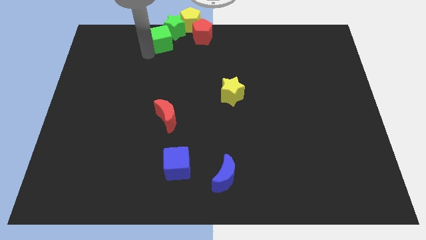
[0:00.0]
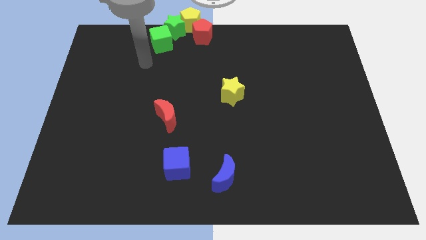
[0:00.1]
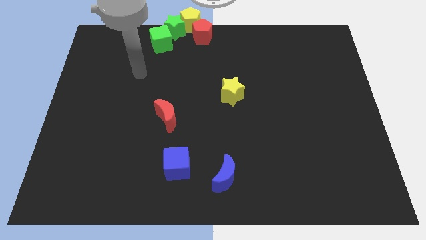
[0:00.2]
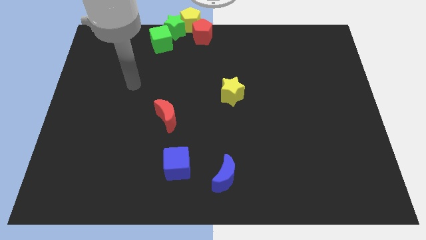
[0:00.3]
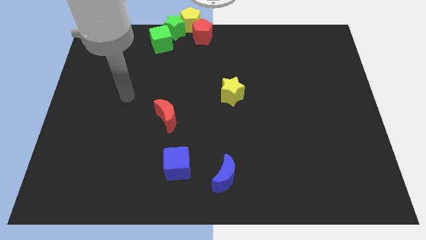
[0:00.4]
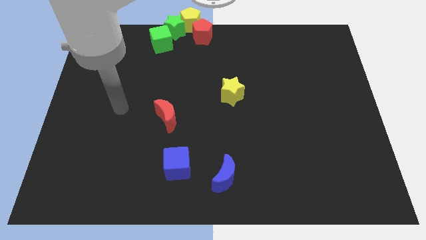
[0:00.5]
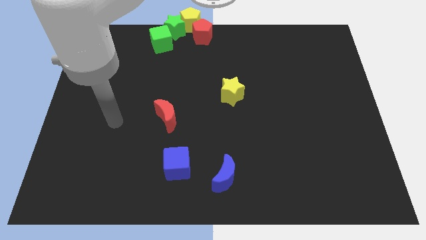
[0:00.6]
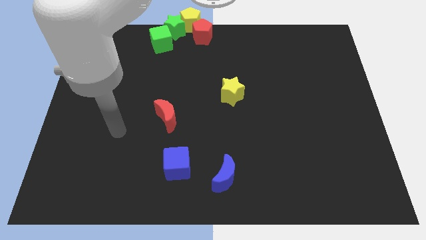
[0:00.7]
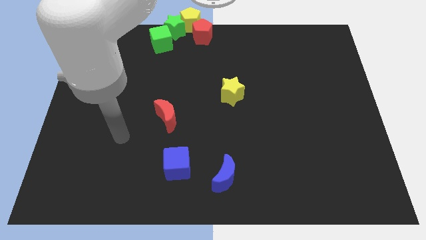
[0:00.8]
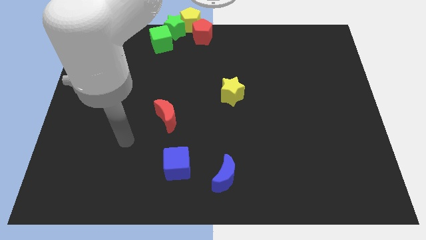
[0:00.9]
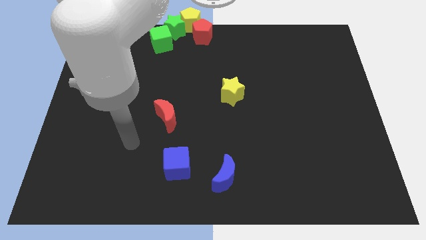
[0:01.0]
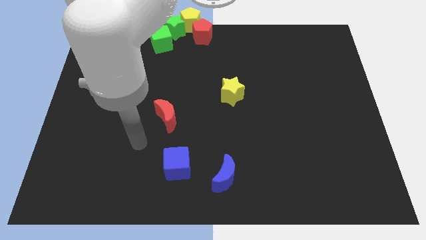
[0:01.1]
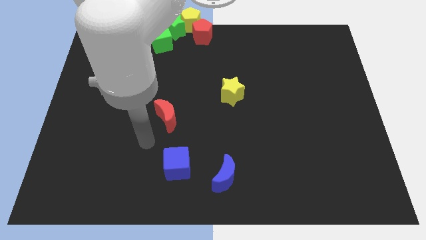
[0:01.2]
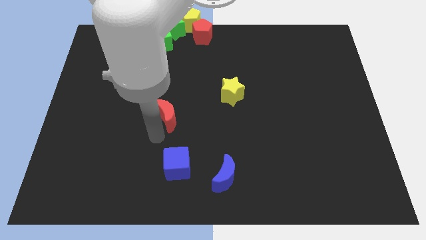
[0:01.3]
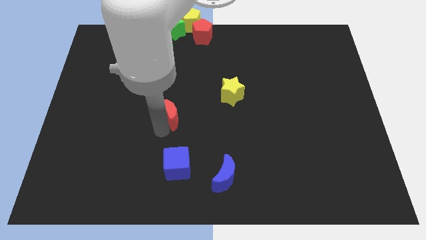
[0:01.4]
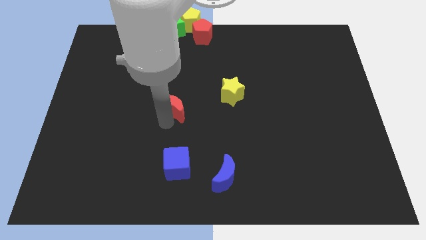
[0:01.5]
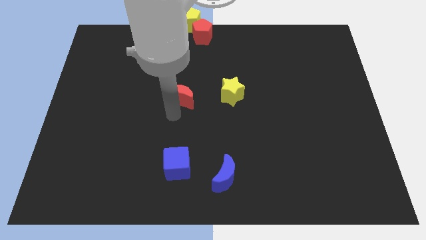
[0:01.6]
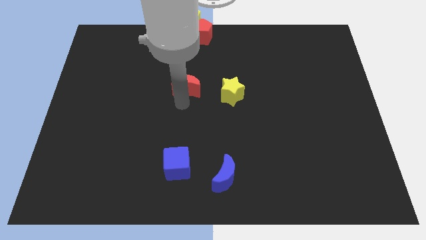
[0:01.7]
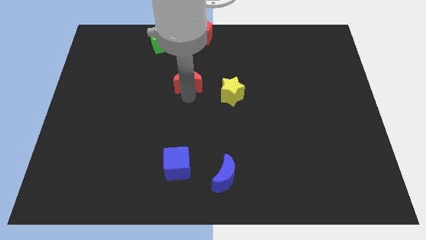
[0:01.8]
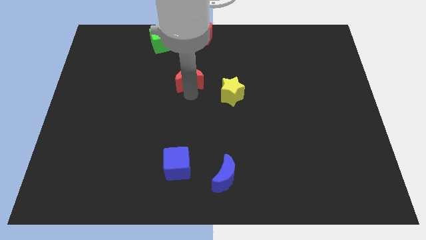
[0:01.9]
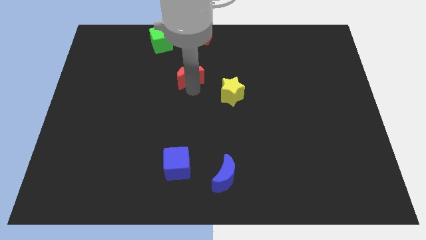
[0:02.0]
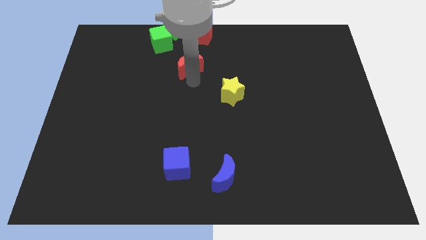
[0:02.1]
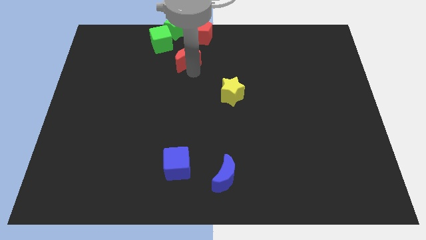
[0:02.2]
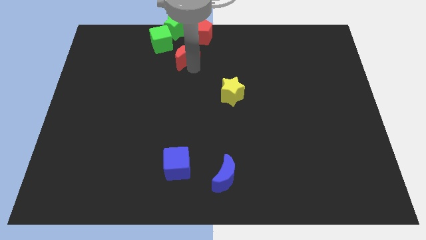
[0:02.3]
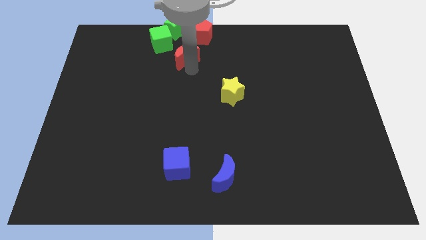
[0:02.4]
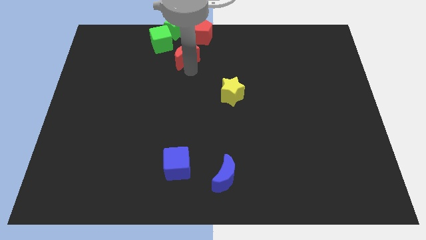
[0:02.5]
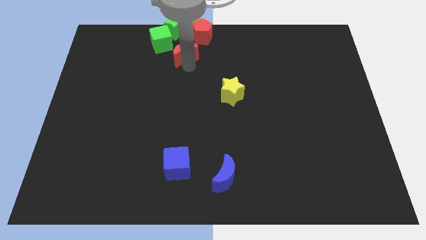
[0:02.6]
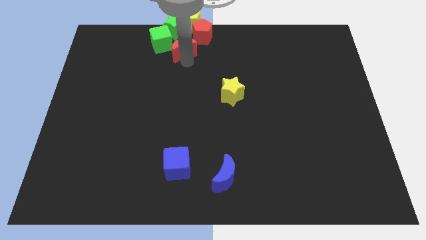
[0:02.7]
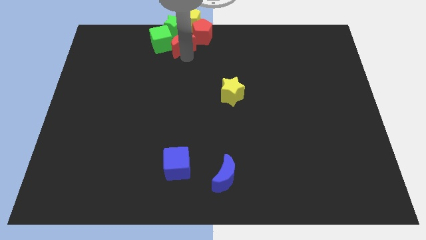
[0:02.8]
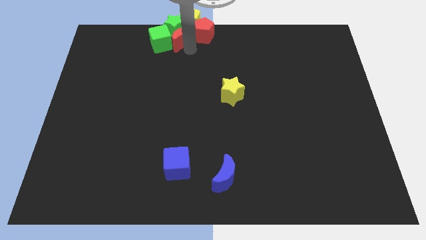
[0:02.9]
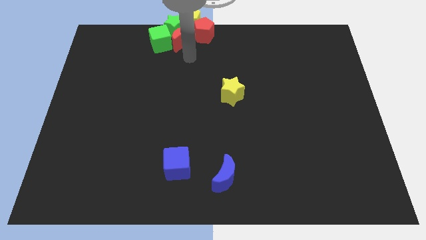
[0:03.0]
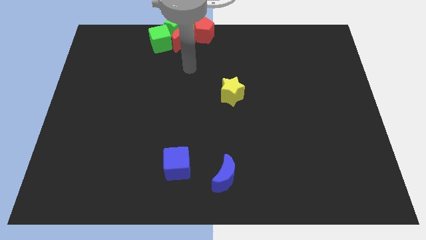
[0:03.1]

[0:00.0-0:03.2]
push the red moon into the green star

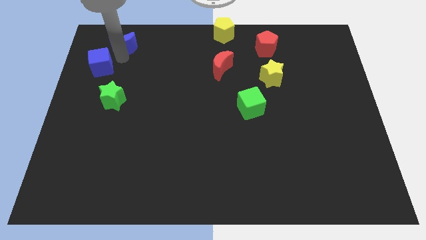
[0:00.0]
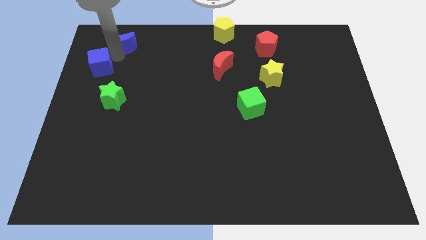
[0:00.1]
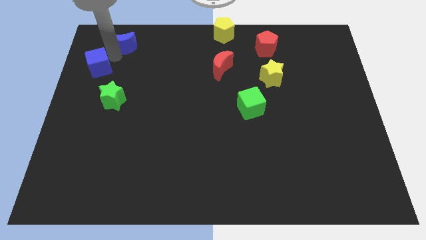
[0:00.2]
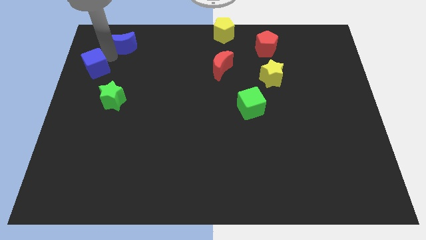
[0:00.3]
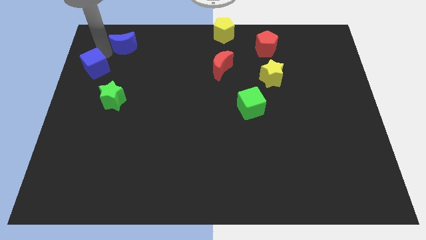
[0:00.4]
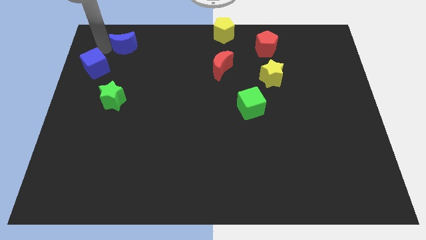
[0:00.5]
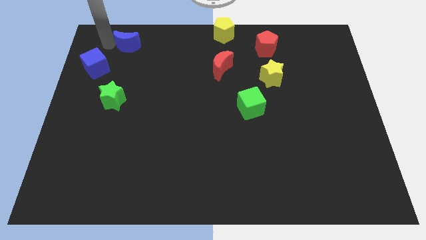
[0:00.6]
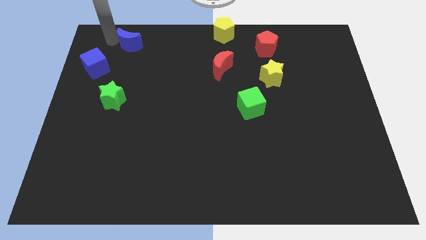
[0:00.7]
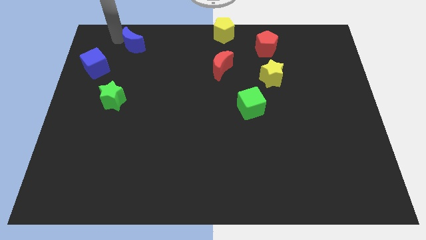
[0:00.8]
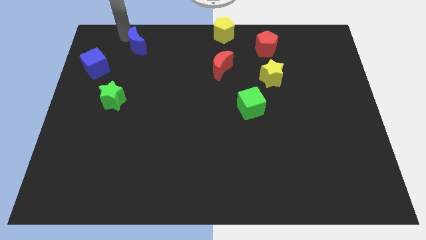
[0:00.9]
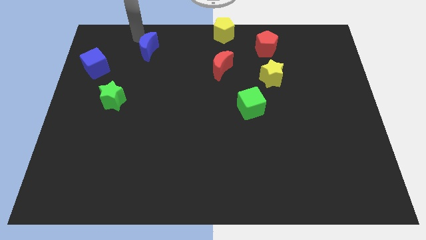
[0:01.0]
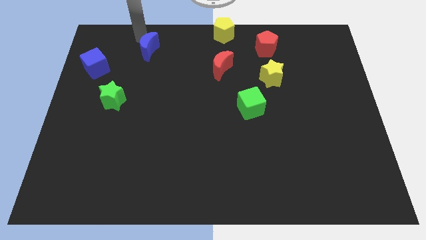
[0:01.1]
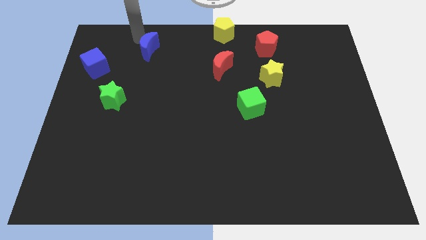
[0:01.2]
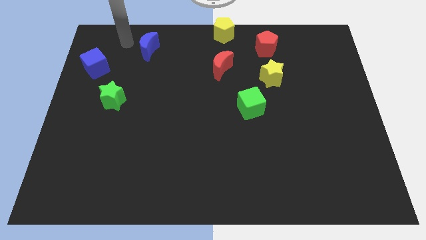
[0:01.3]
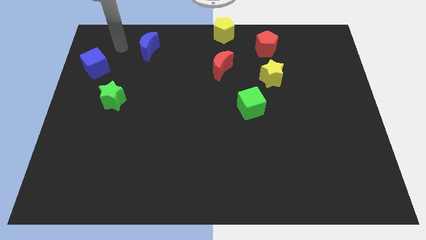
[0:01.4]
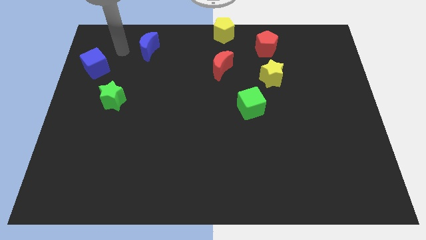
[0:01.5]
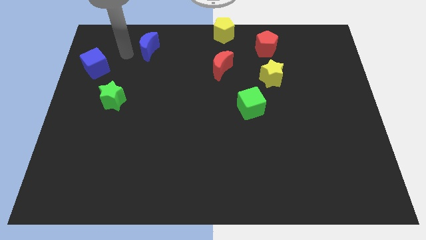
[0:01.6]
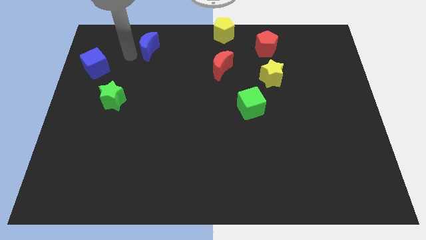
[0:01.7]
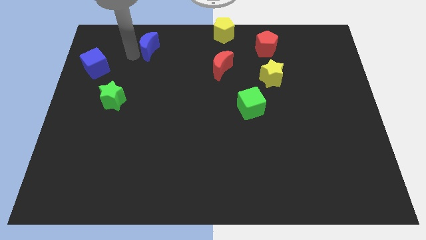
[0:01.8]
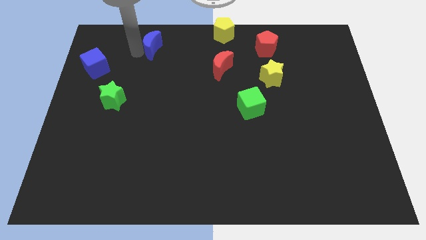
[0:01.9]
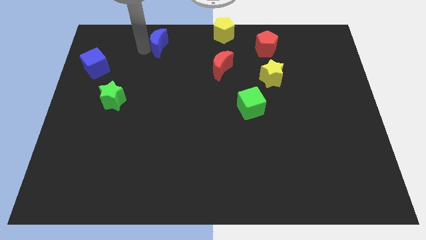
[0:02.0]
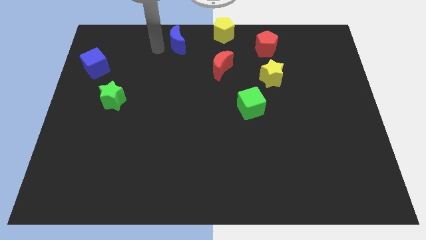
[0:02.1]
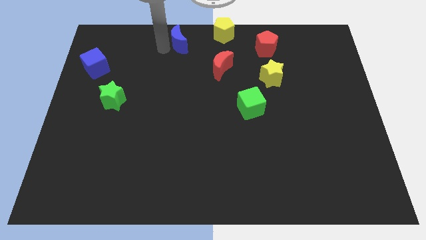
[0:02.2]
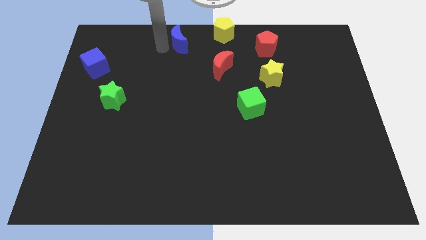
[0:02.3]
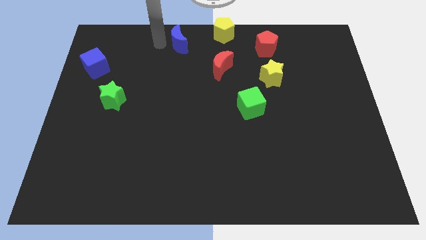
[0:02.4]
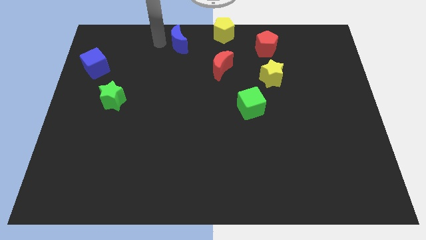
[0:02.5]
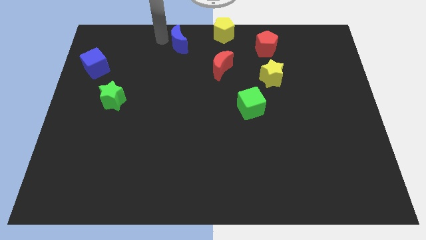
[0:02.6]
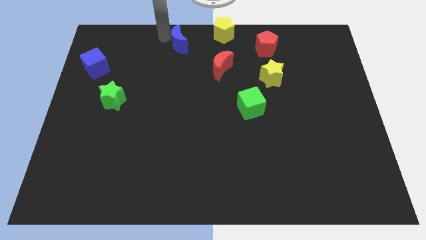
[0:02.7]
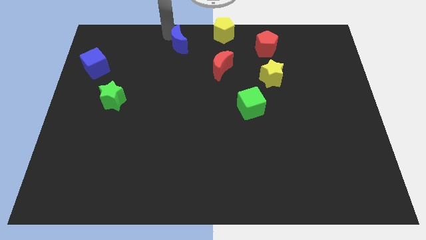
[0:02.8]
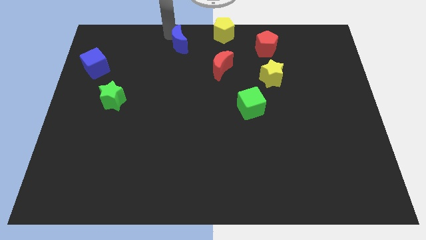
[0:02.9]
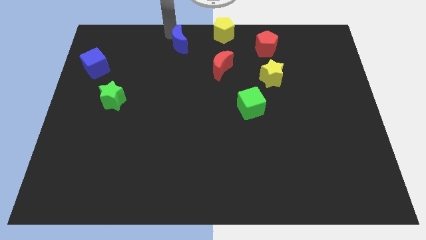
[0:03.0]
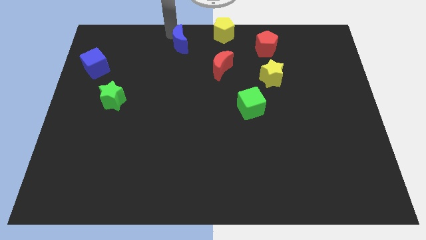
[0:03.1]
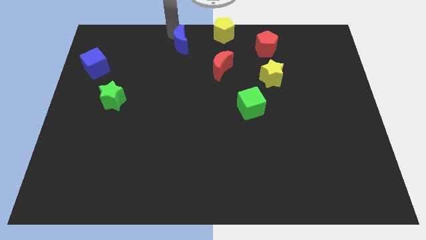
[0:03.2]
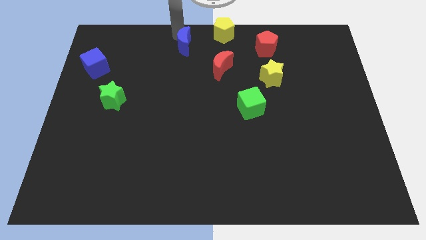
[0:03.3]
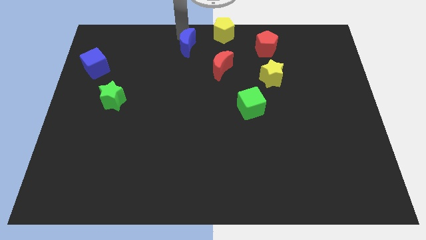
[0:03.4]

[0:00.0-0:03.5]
place blue crescent above red crescent

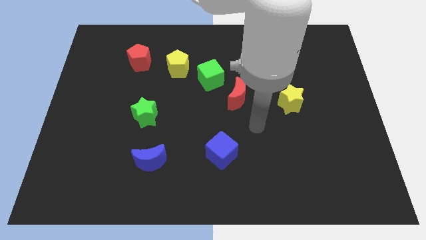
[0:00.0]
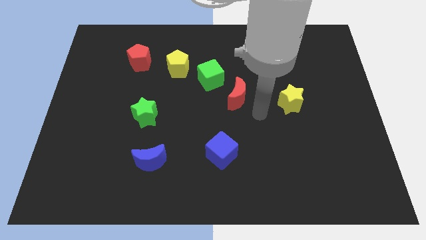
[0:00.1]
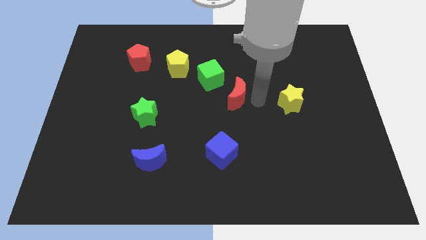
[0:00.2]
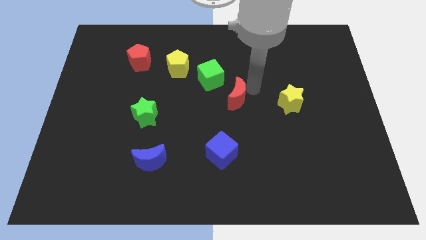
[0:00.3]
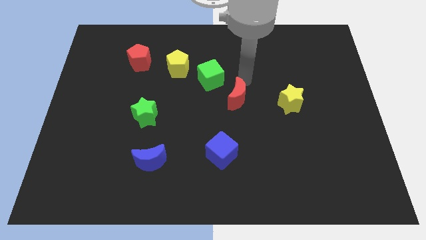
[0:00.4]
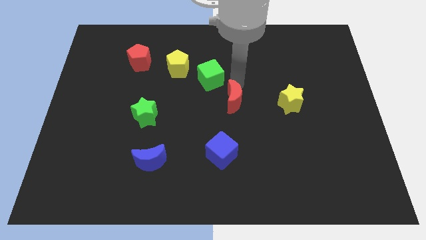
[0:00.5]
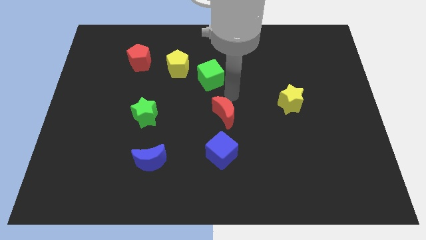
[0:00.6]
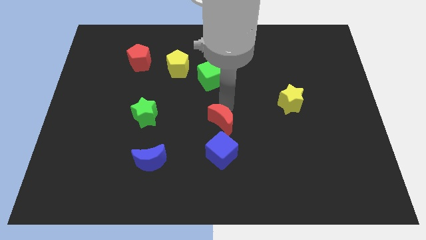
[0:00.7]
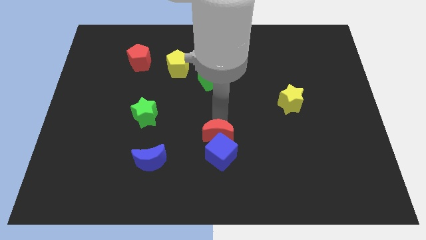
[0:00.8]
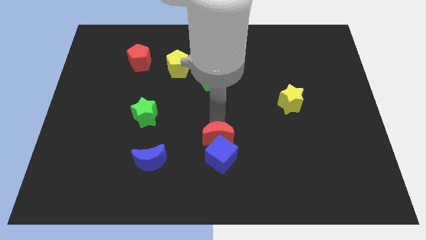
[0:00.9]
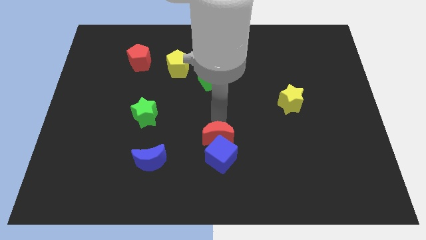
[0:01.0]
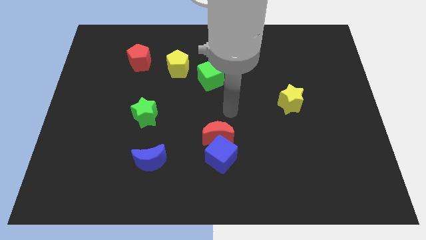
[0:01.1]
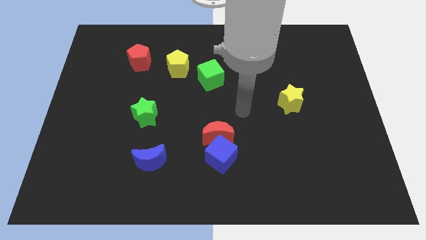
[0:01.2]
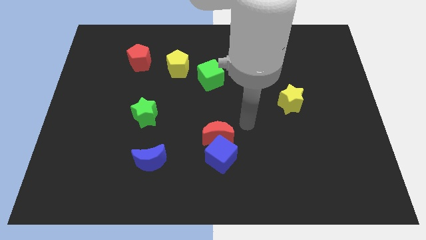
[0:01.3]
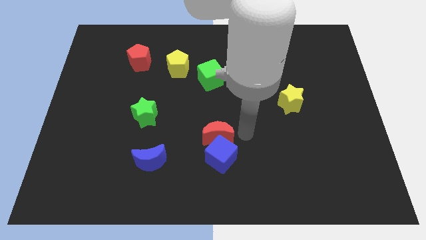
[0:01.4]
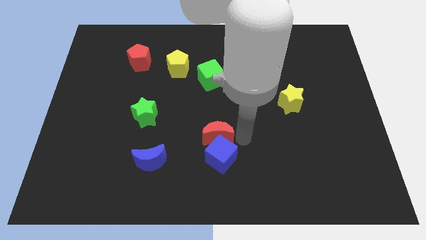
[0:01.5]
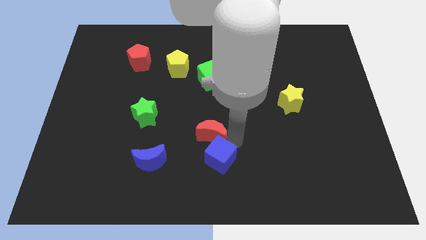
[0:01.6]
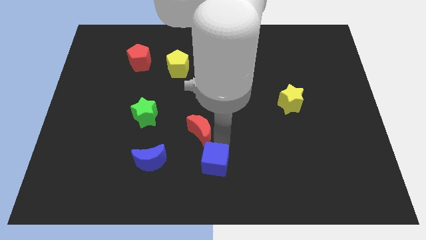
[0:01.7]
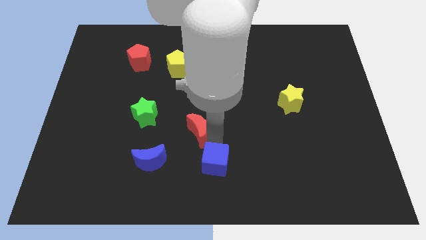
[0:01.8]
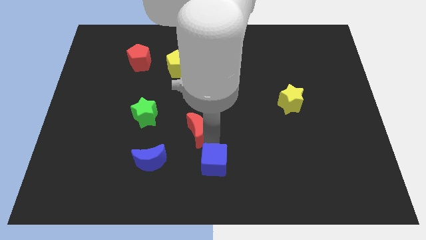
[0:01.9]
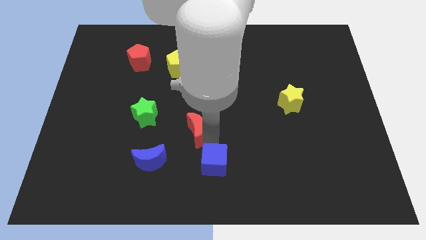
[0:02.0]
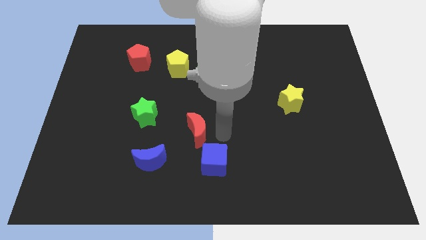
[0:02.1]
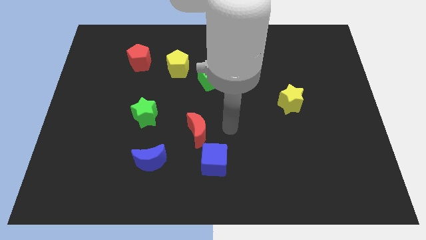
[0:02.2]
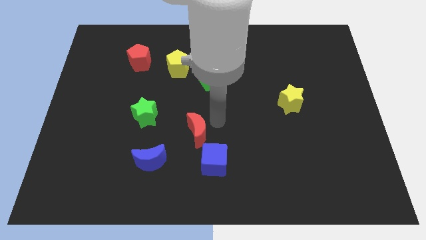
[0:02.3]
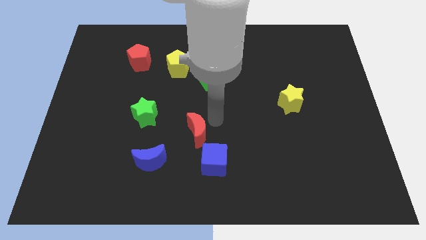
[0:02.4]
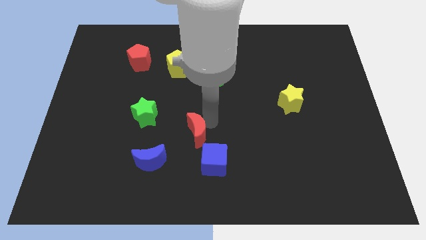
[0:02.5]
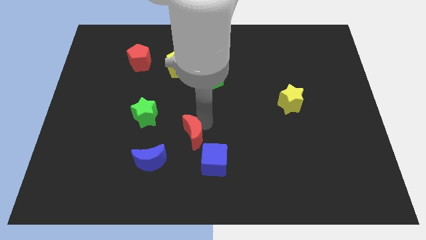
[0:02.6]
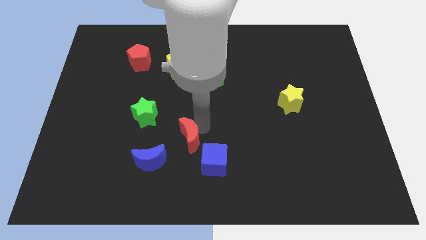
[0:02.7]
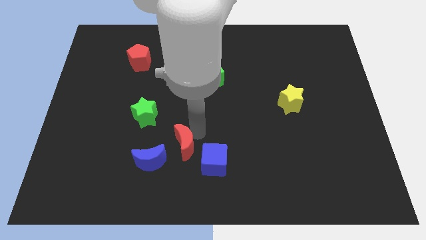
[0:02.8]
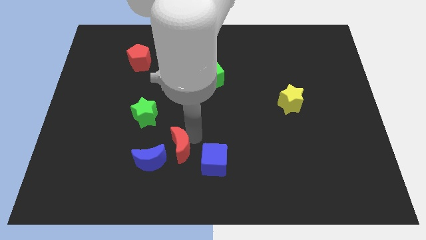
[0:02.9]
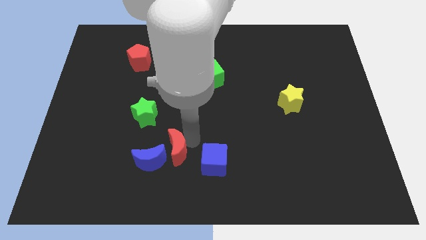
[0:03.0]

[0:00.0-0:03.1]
push the red crescent below yellow pentagon
